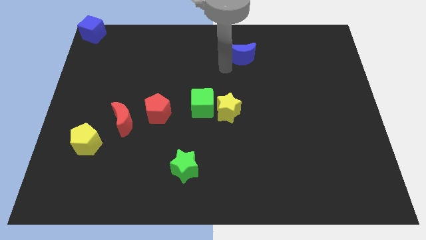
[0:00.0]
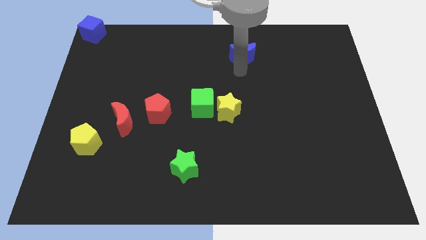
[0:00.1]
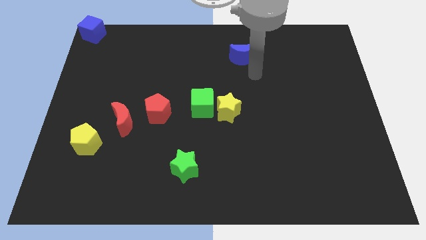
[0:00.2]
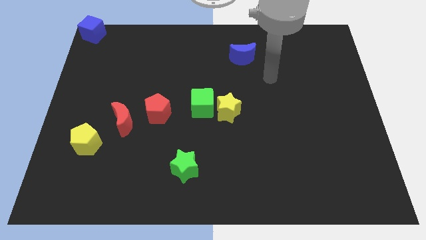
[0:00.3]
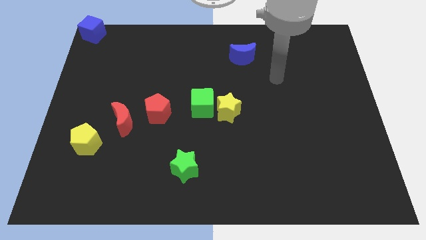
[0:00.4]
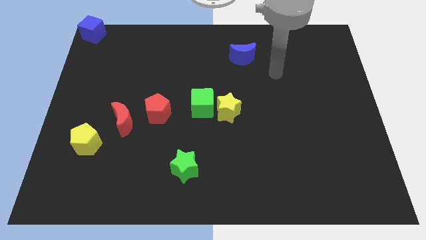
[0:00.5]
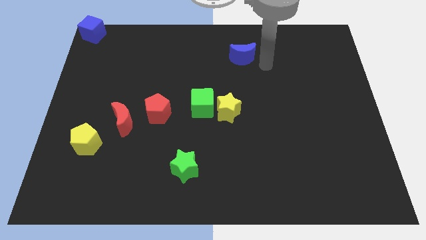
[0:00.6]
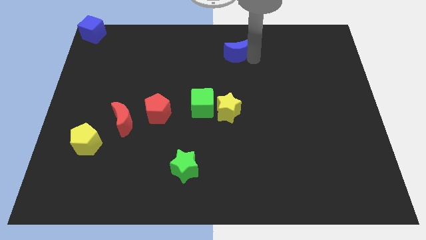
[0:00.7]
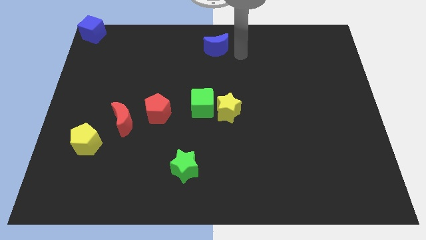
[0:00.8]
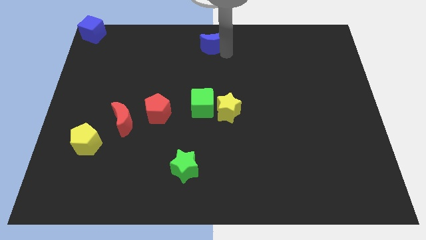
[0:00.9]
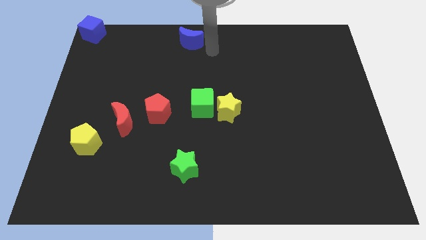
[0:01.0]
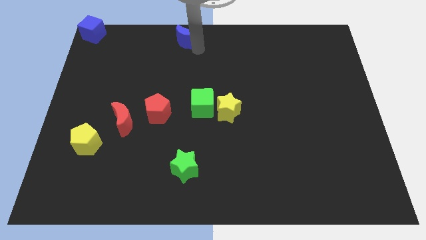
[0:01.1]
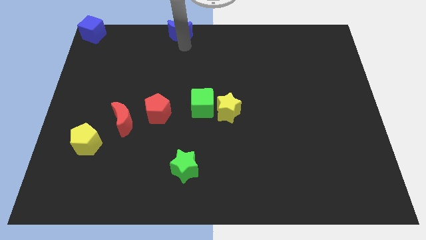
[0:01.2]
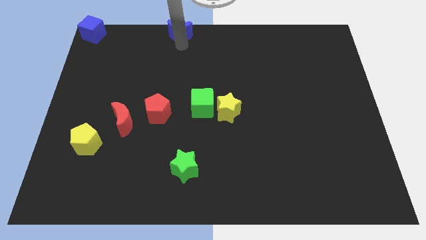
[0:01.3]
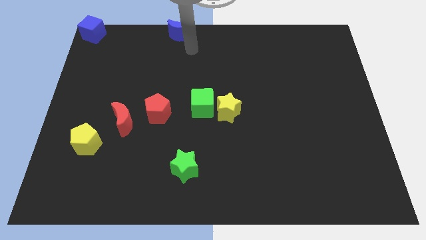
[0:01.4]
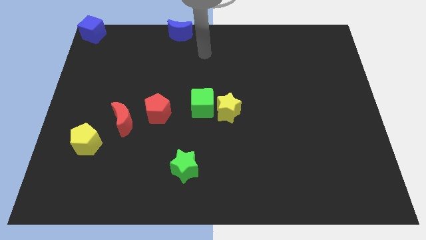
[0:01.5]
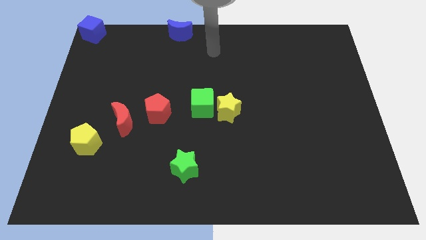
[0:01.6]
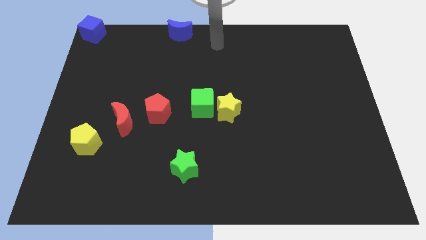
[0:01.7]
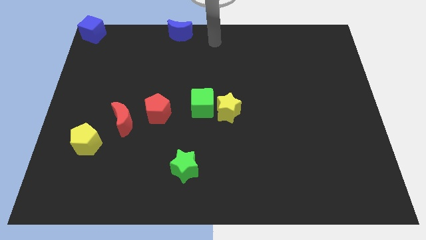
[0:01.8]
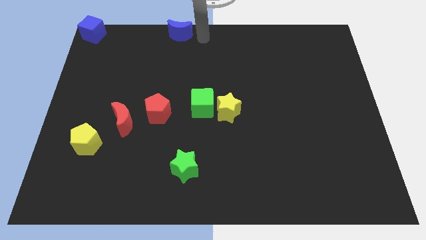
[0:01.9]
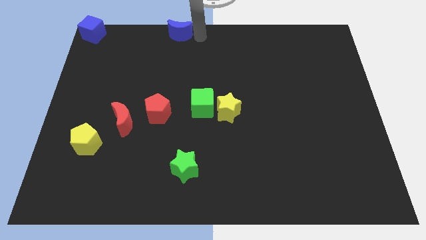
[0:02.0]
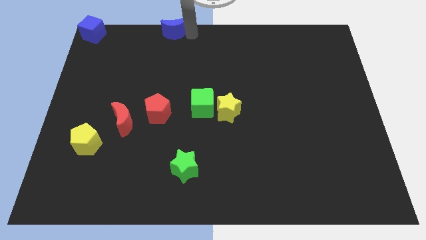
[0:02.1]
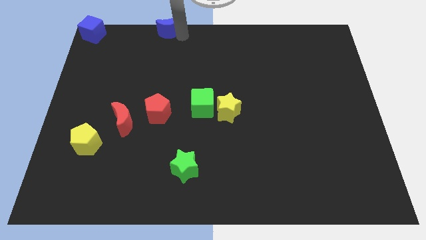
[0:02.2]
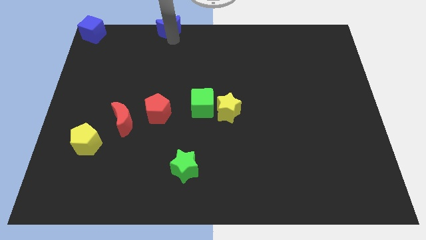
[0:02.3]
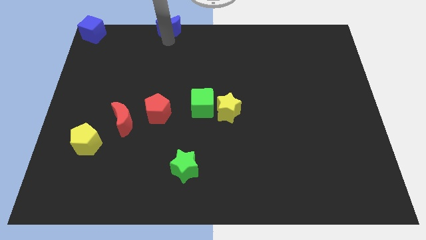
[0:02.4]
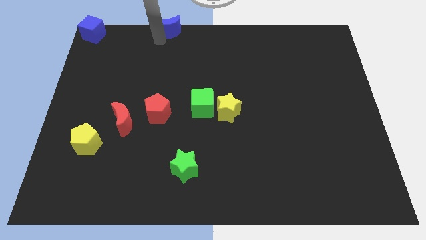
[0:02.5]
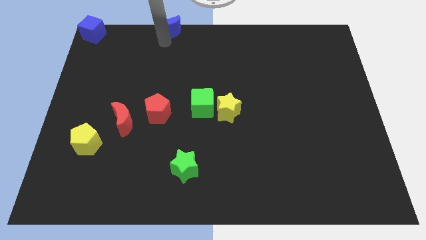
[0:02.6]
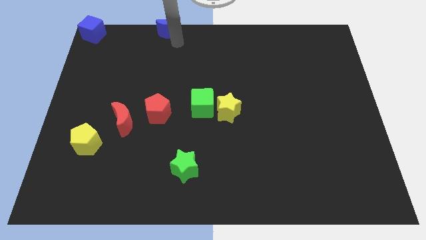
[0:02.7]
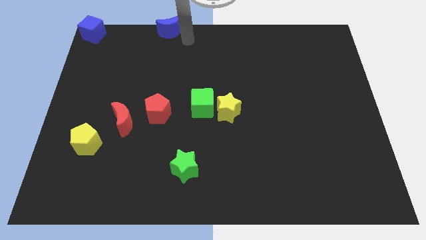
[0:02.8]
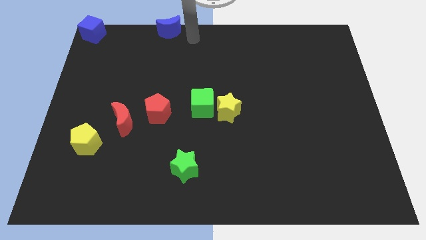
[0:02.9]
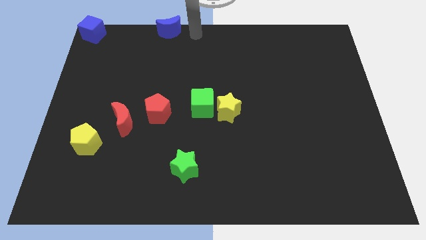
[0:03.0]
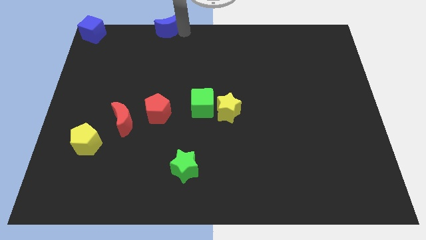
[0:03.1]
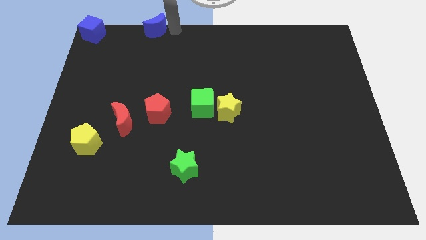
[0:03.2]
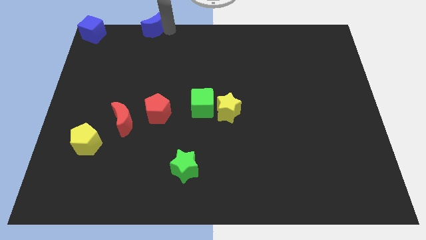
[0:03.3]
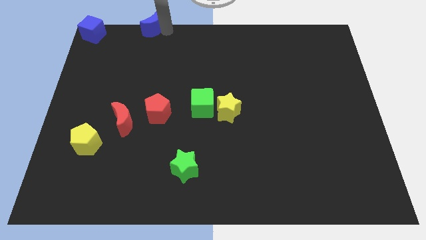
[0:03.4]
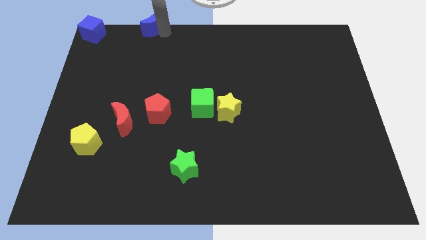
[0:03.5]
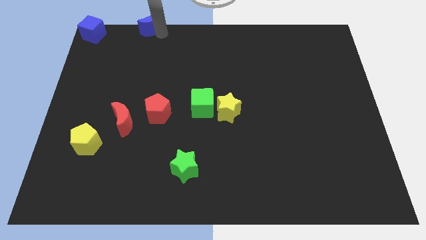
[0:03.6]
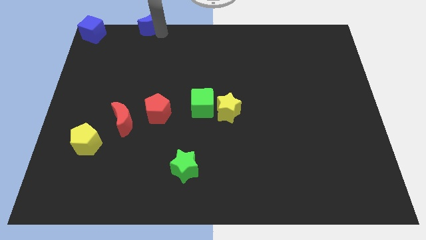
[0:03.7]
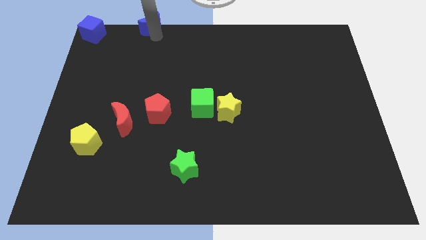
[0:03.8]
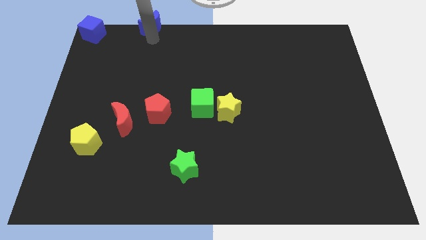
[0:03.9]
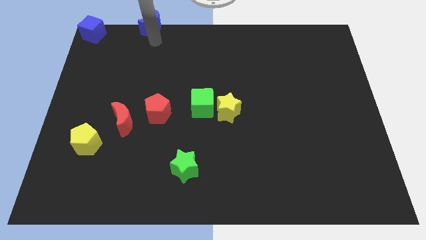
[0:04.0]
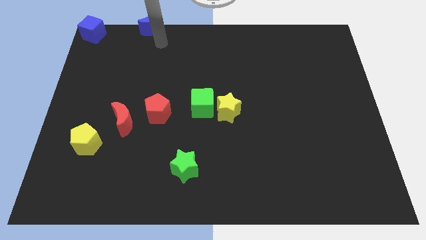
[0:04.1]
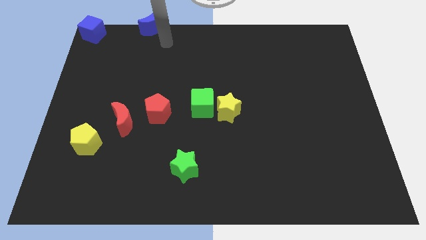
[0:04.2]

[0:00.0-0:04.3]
place the blue moon right to the blue cube

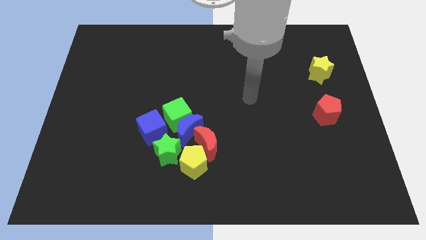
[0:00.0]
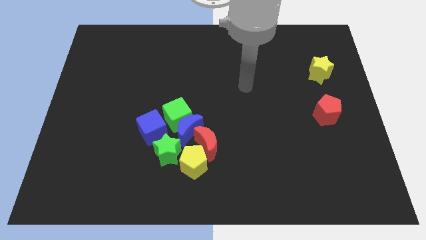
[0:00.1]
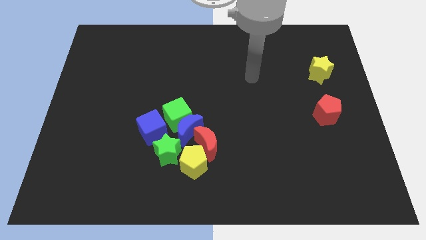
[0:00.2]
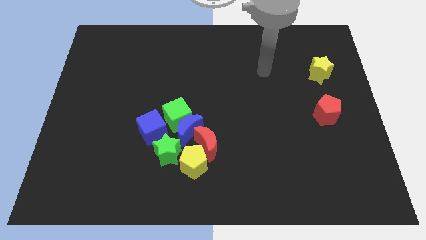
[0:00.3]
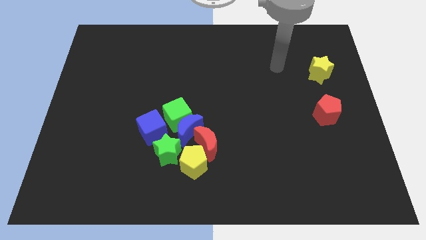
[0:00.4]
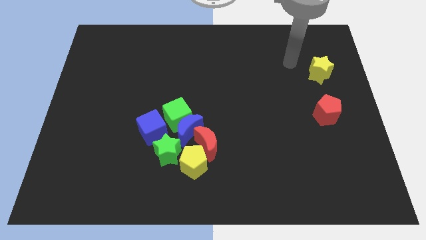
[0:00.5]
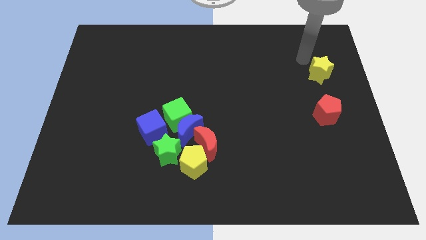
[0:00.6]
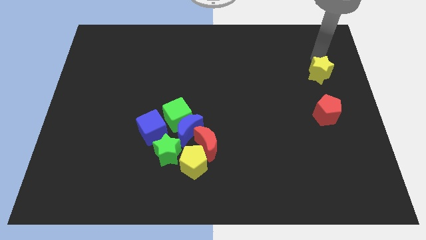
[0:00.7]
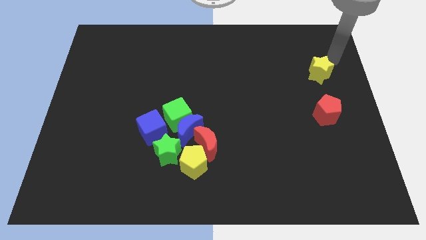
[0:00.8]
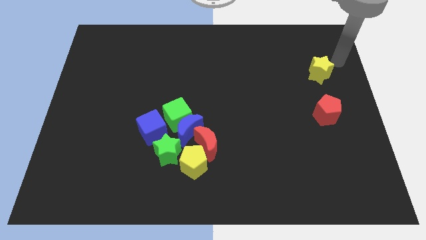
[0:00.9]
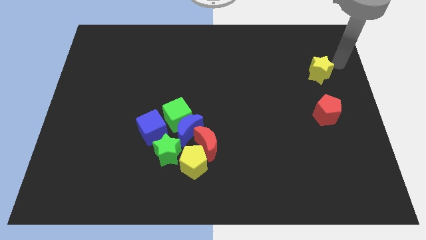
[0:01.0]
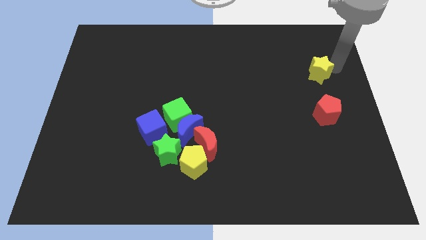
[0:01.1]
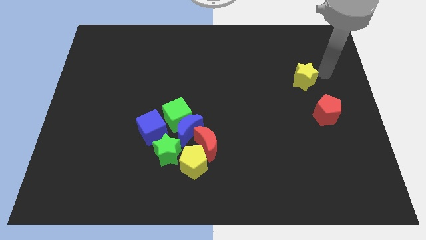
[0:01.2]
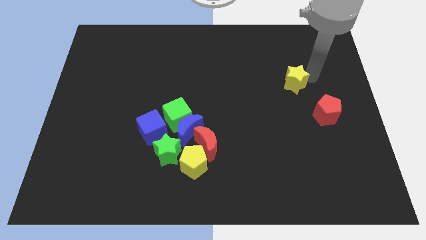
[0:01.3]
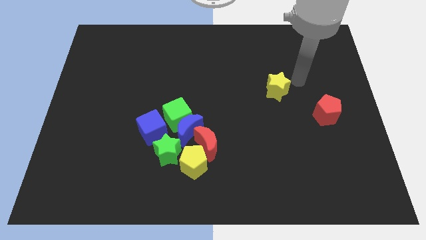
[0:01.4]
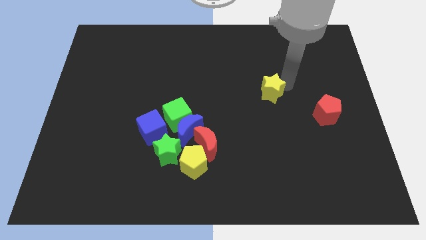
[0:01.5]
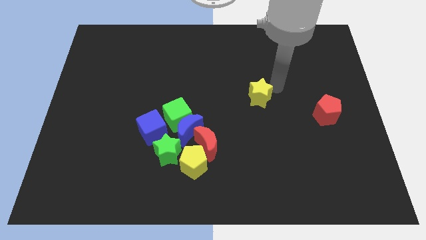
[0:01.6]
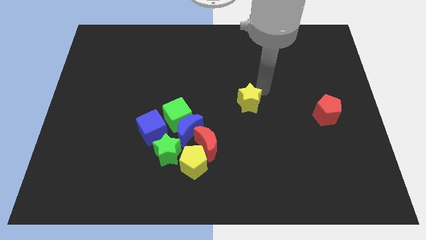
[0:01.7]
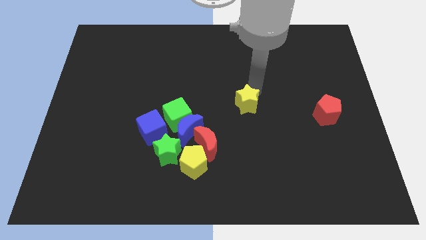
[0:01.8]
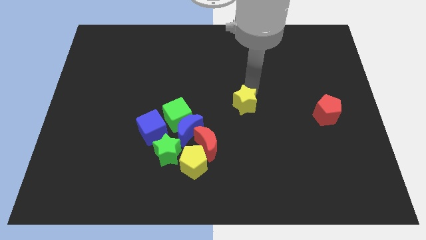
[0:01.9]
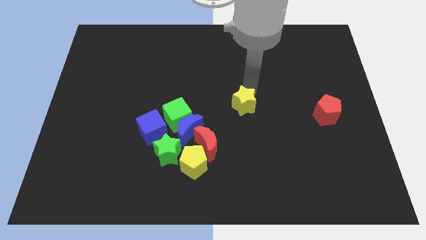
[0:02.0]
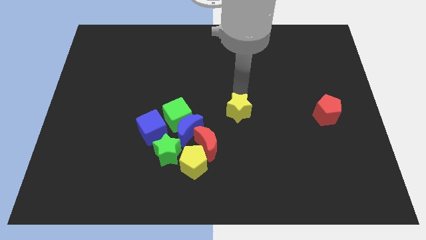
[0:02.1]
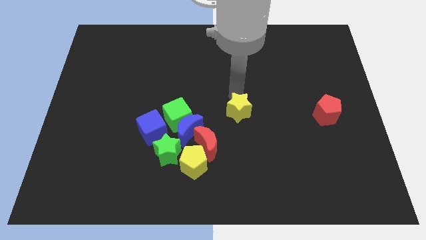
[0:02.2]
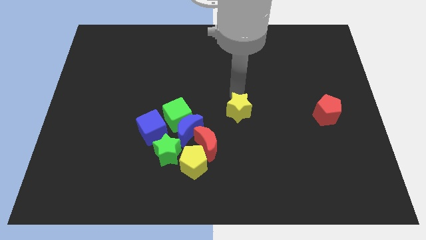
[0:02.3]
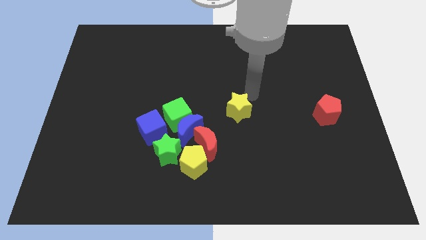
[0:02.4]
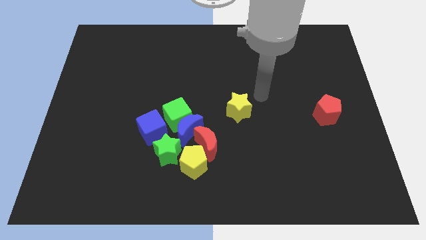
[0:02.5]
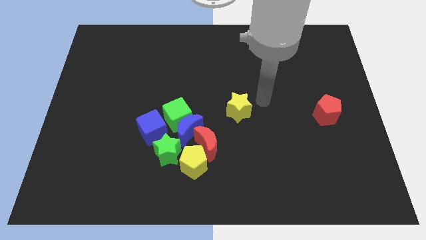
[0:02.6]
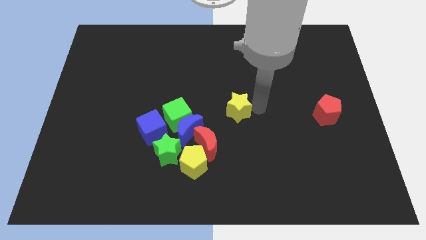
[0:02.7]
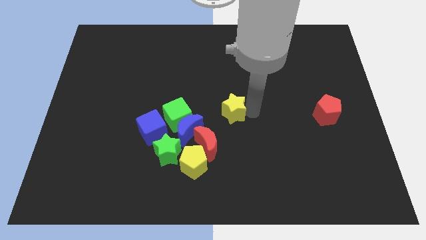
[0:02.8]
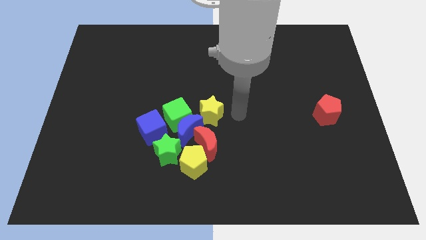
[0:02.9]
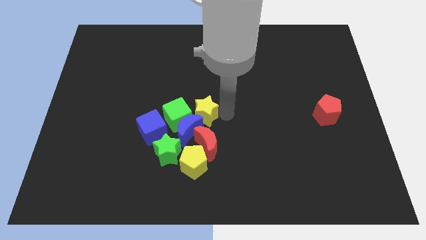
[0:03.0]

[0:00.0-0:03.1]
move yellow star to the right of green cube

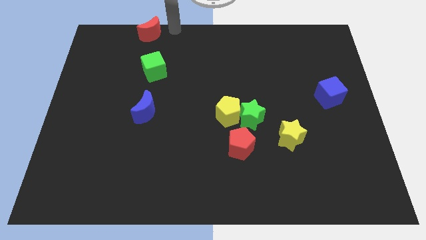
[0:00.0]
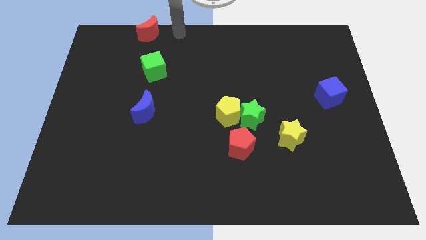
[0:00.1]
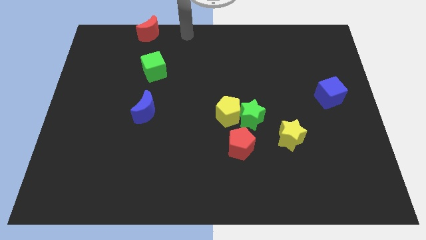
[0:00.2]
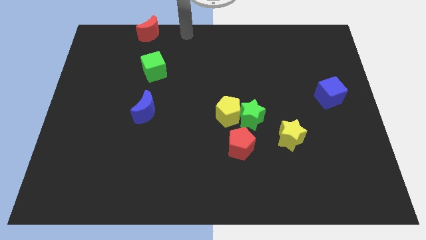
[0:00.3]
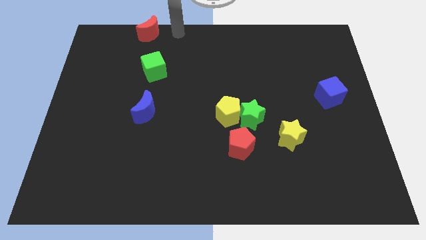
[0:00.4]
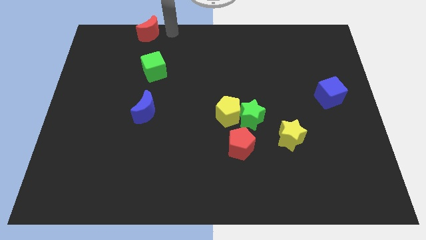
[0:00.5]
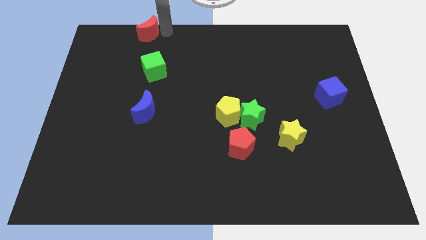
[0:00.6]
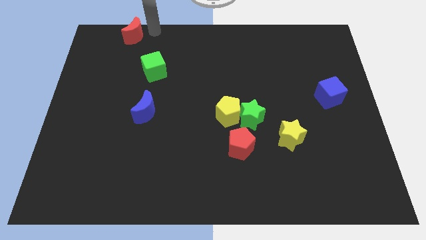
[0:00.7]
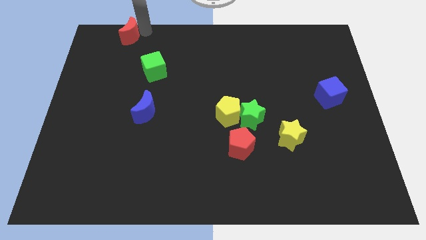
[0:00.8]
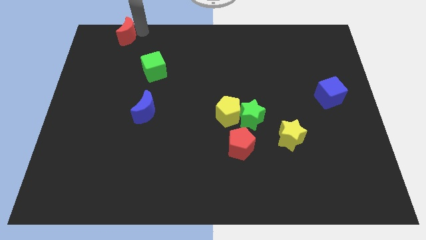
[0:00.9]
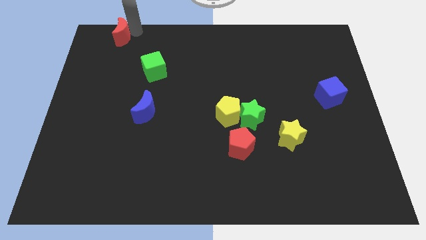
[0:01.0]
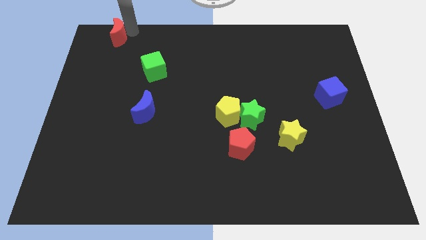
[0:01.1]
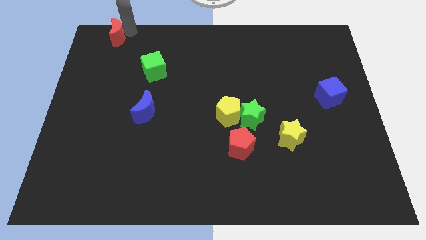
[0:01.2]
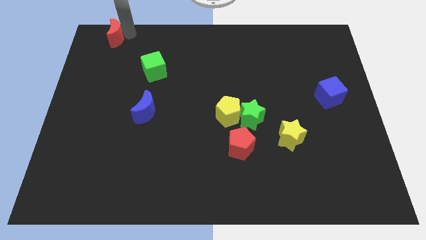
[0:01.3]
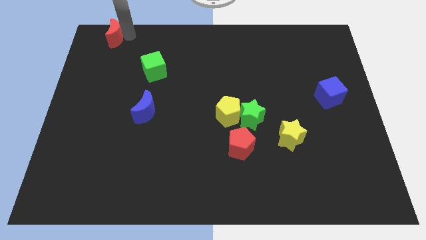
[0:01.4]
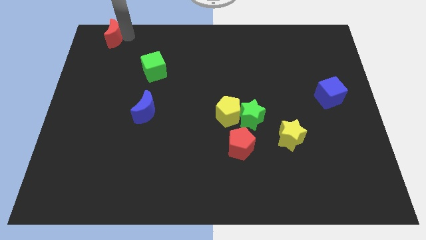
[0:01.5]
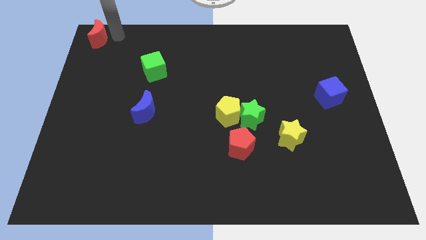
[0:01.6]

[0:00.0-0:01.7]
move red moon to the left corner of the board
